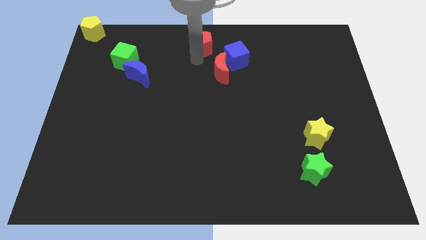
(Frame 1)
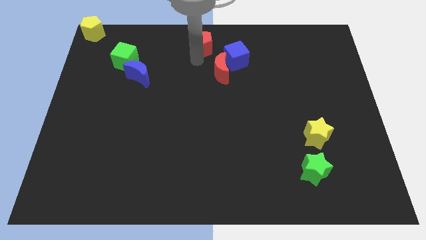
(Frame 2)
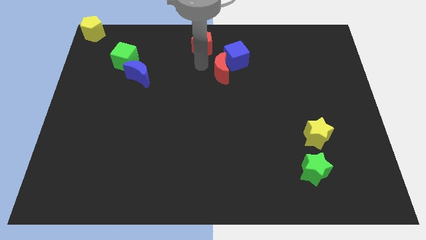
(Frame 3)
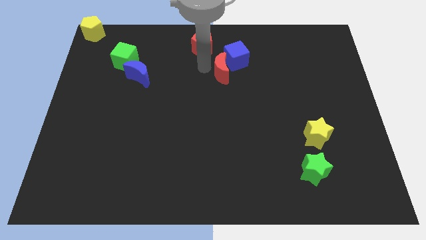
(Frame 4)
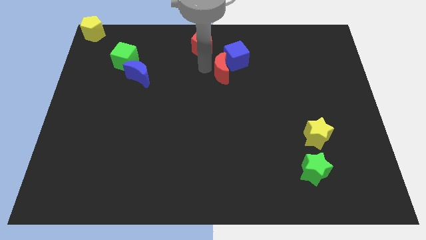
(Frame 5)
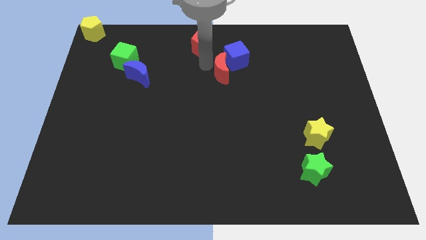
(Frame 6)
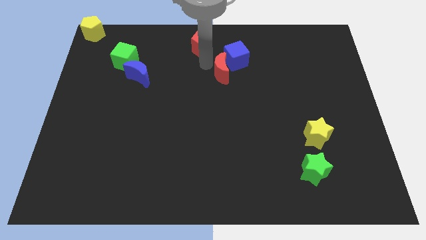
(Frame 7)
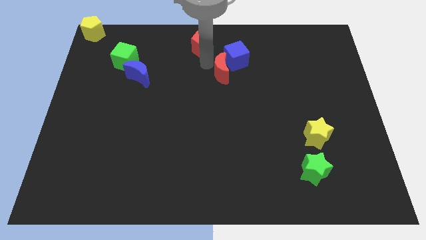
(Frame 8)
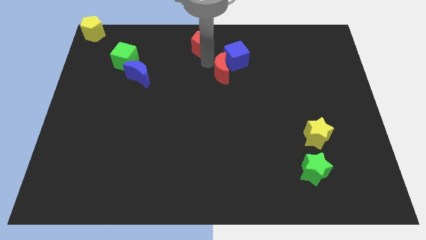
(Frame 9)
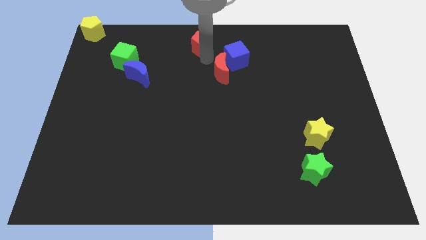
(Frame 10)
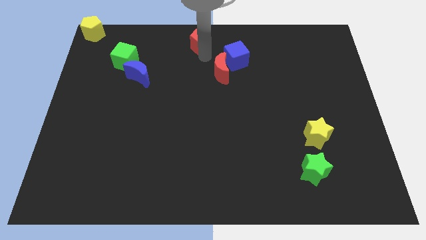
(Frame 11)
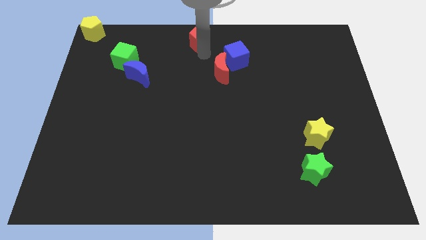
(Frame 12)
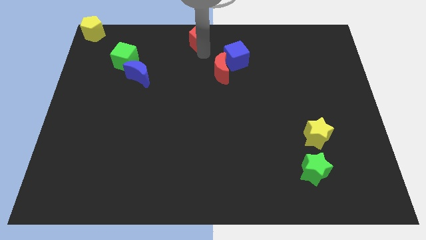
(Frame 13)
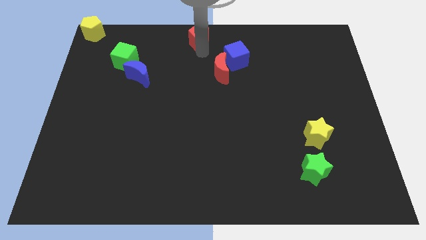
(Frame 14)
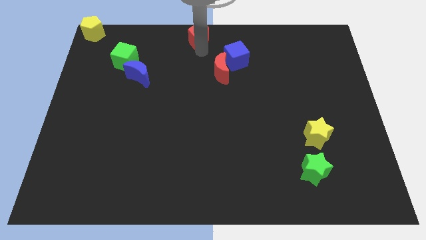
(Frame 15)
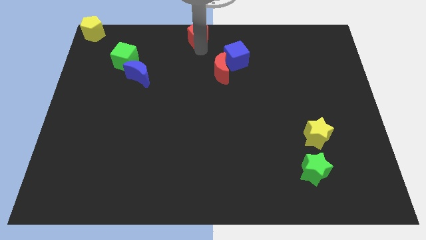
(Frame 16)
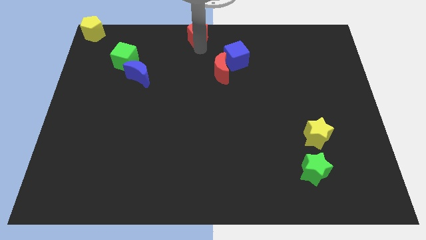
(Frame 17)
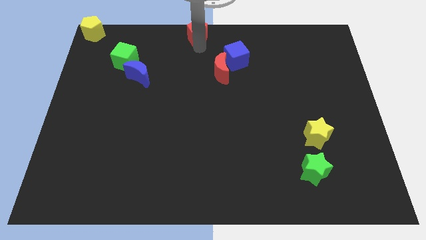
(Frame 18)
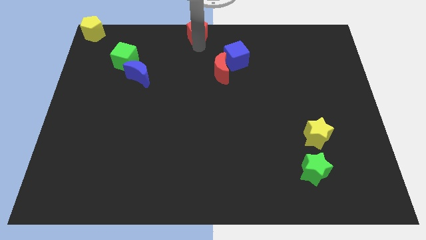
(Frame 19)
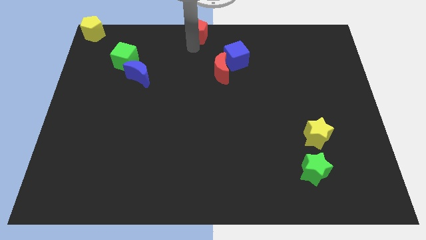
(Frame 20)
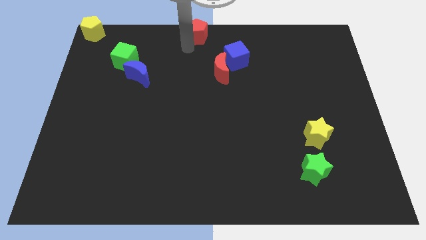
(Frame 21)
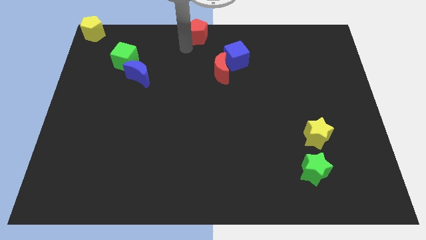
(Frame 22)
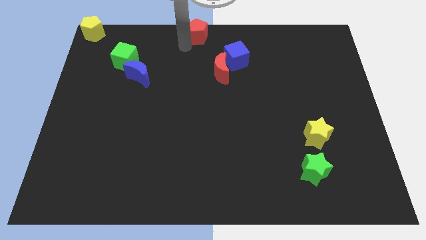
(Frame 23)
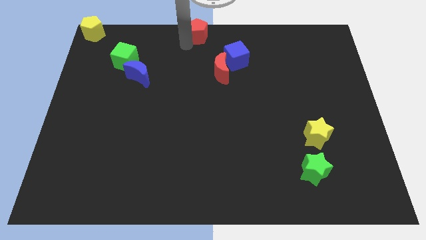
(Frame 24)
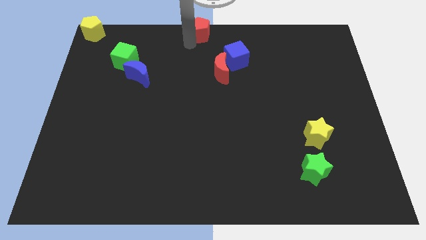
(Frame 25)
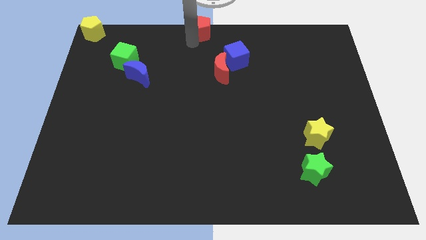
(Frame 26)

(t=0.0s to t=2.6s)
move the red pentagon to the top center of the board

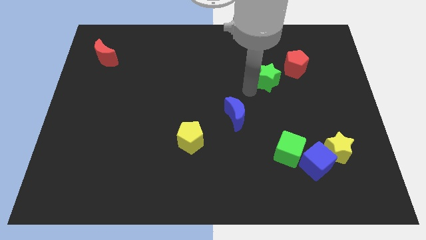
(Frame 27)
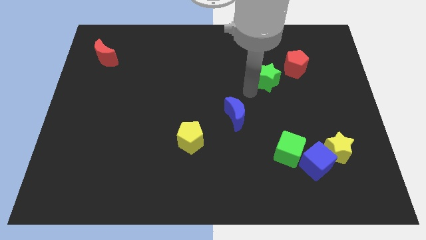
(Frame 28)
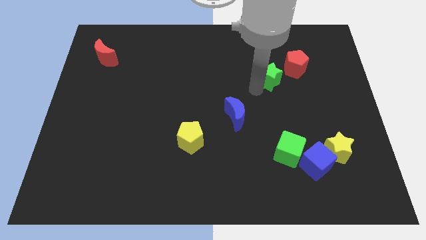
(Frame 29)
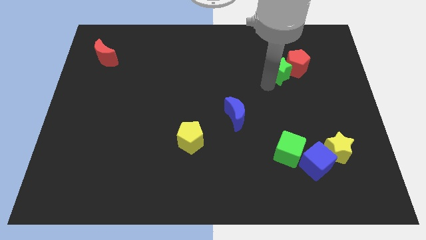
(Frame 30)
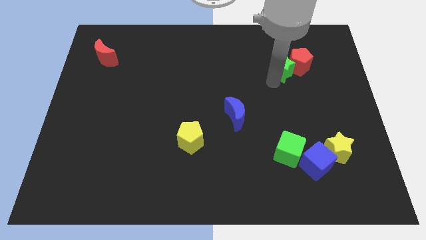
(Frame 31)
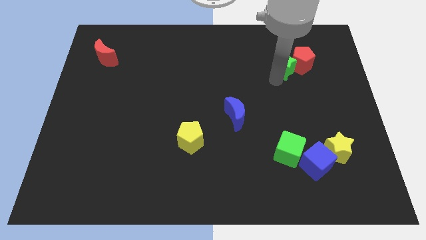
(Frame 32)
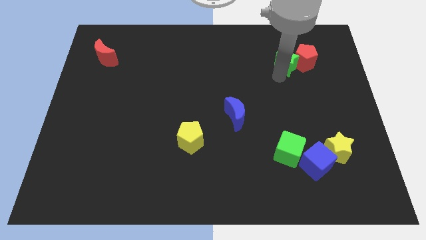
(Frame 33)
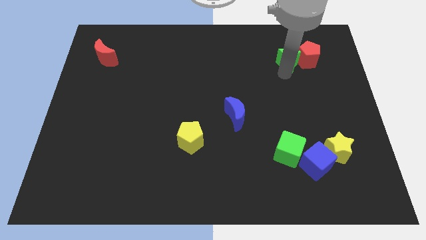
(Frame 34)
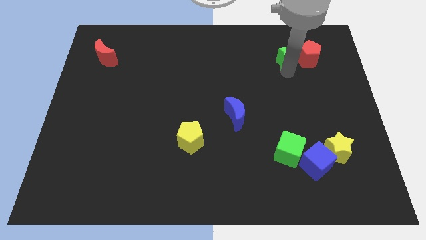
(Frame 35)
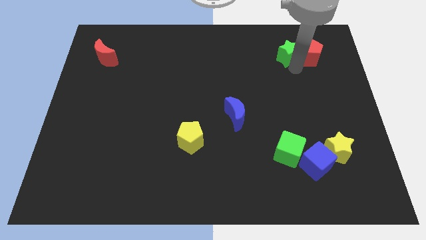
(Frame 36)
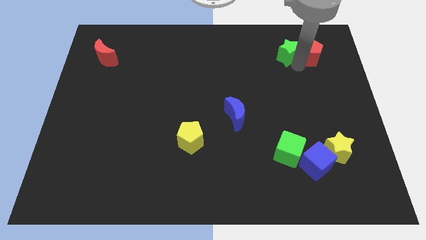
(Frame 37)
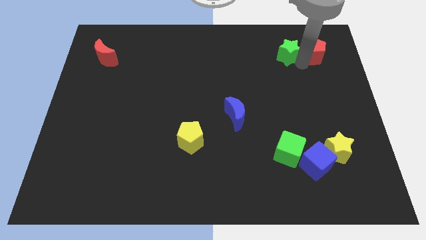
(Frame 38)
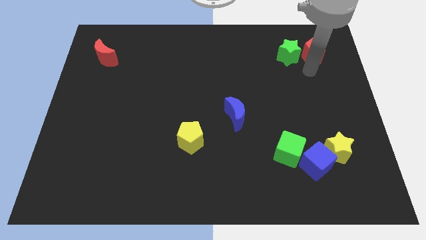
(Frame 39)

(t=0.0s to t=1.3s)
push green star towards red pentagon

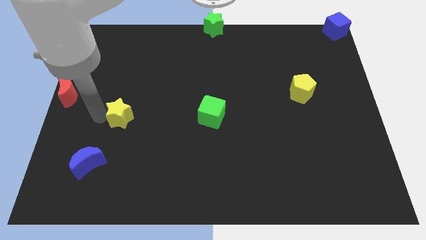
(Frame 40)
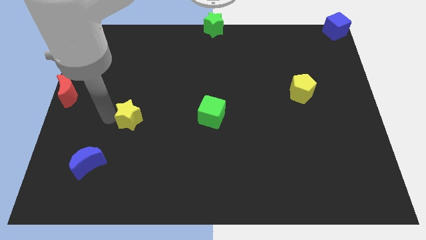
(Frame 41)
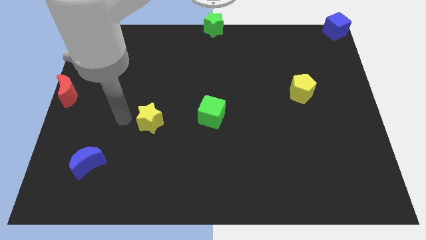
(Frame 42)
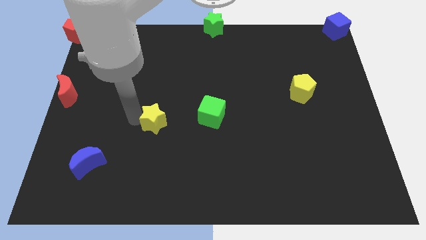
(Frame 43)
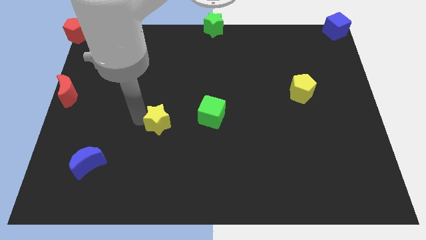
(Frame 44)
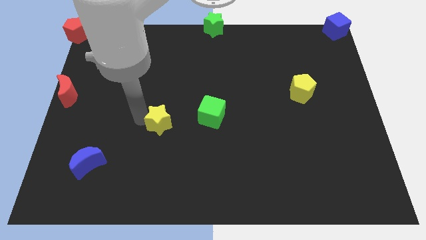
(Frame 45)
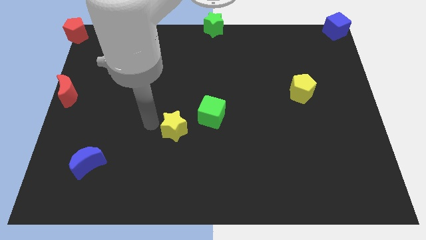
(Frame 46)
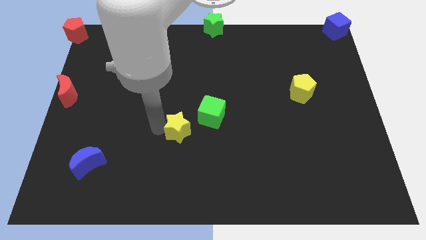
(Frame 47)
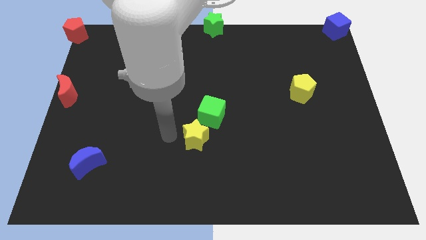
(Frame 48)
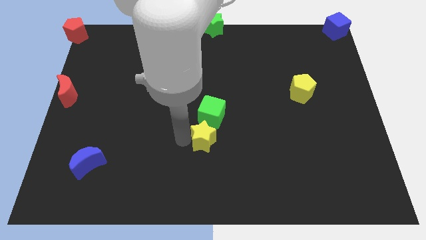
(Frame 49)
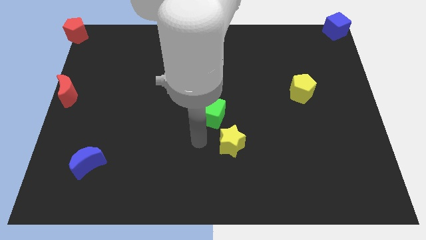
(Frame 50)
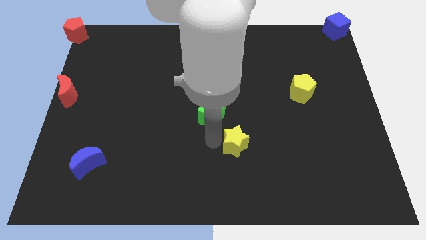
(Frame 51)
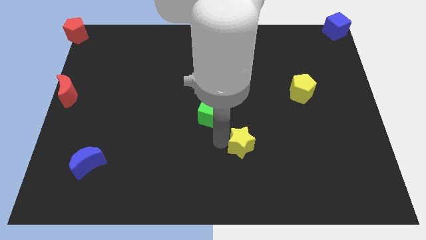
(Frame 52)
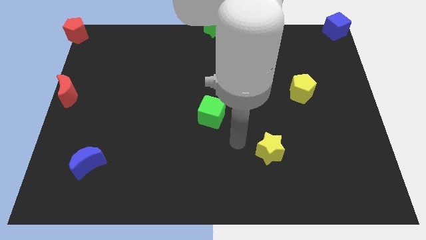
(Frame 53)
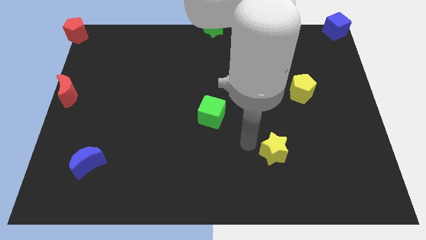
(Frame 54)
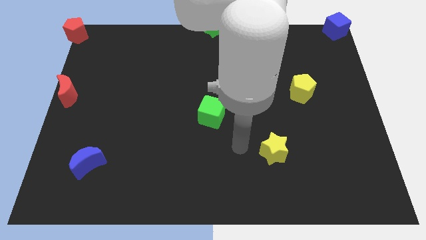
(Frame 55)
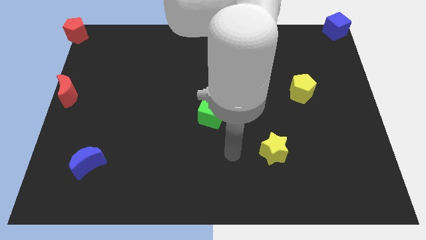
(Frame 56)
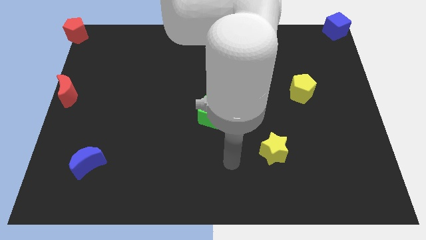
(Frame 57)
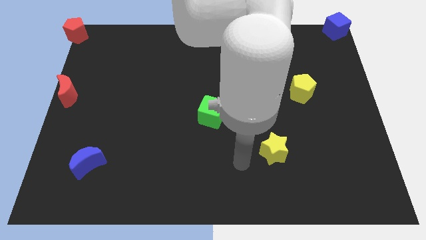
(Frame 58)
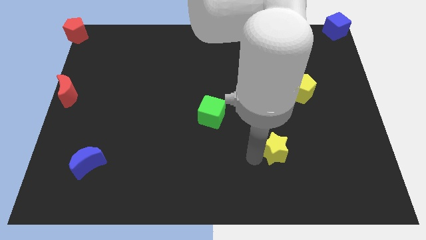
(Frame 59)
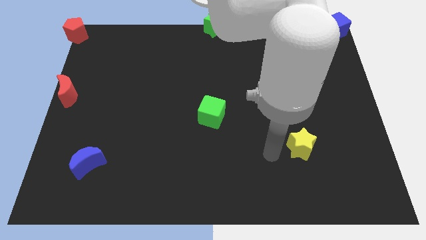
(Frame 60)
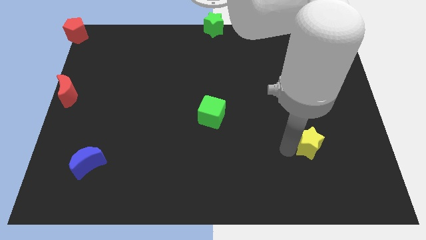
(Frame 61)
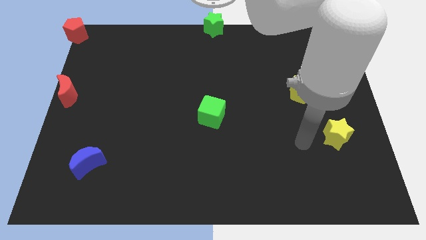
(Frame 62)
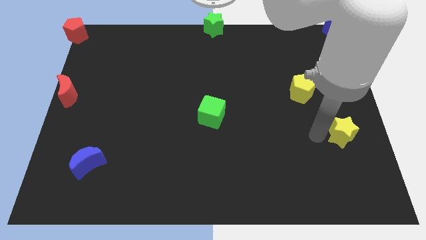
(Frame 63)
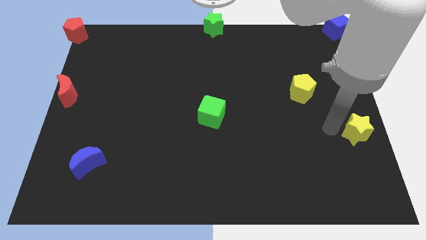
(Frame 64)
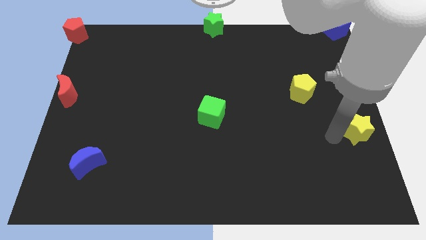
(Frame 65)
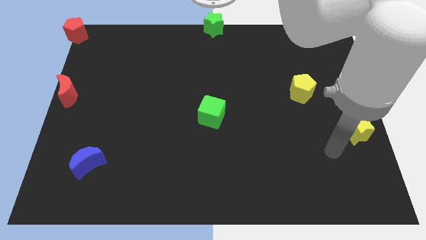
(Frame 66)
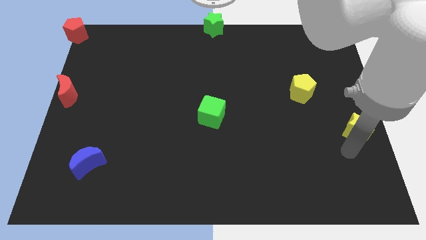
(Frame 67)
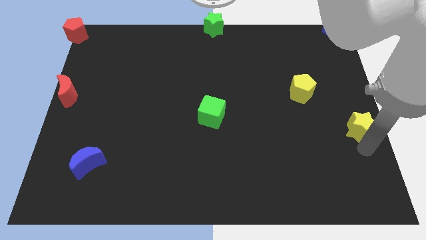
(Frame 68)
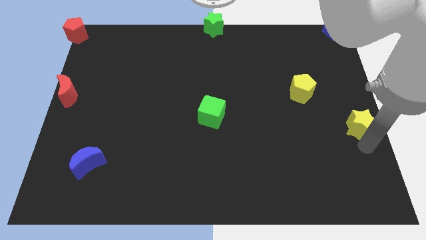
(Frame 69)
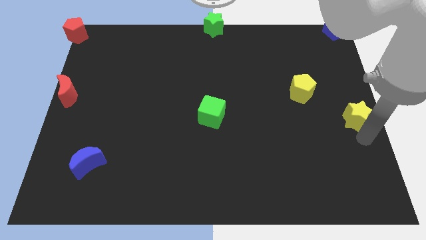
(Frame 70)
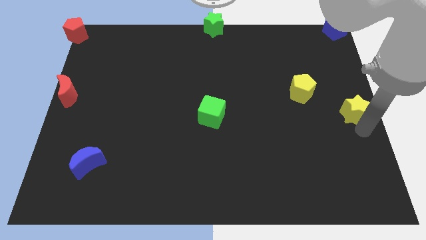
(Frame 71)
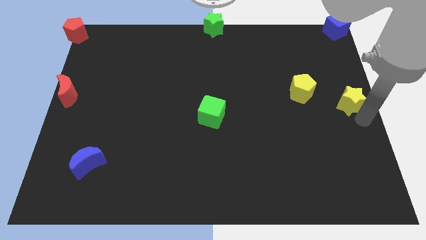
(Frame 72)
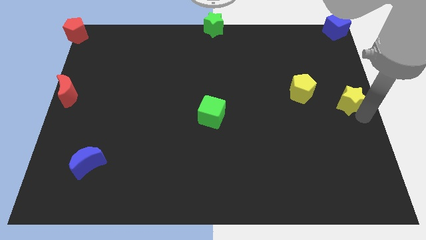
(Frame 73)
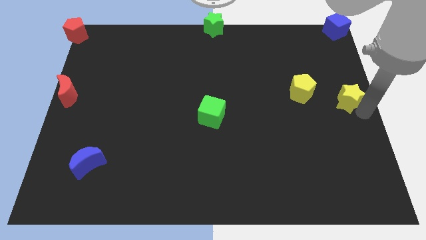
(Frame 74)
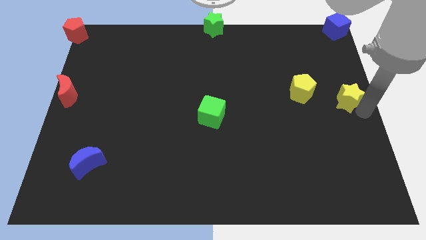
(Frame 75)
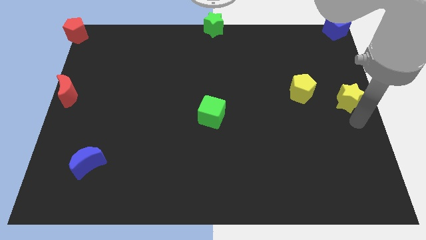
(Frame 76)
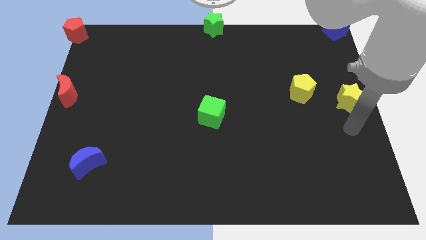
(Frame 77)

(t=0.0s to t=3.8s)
place the yellow star right to the yellow pentagon

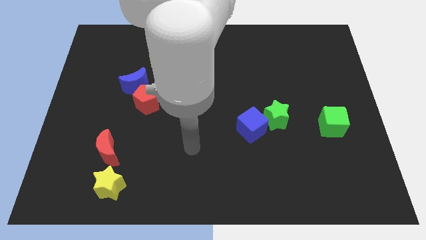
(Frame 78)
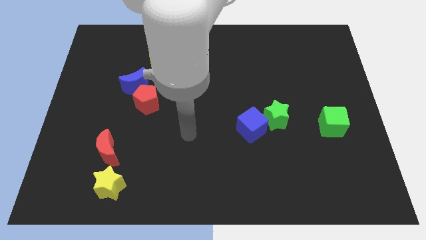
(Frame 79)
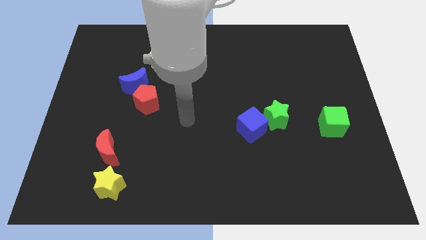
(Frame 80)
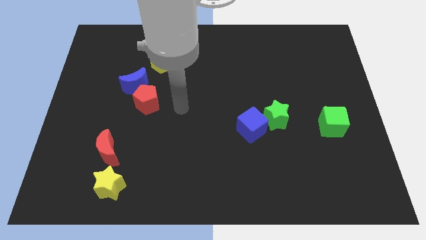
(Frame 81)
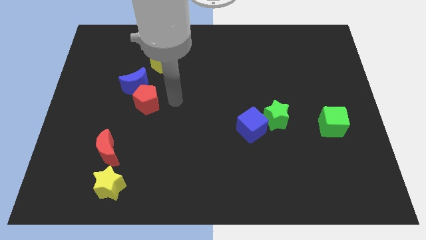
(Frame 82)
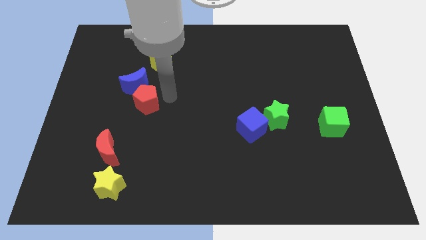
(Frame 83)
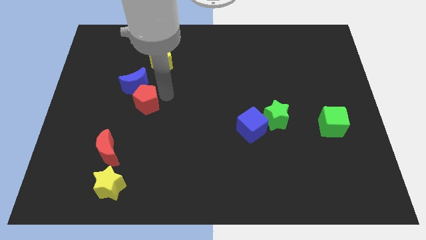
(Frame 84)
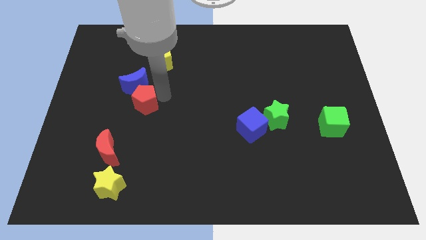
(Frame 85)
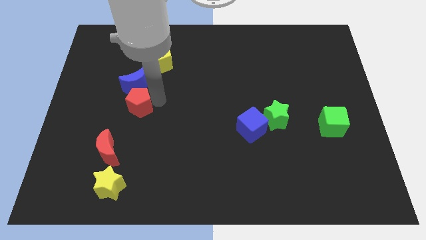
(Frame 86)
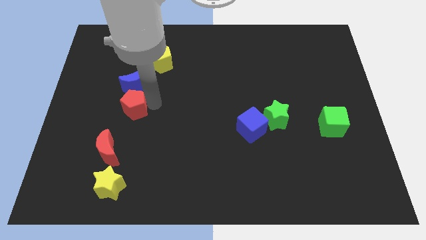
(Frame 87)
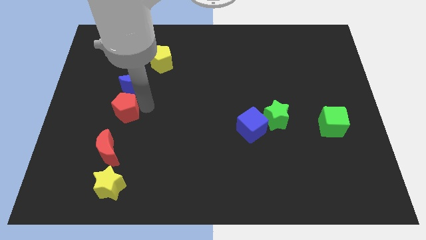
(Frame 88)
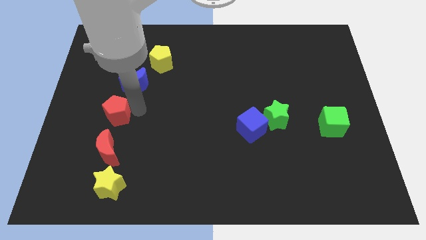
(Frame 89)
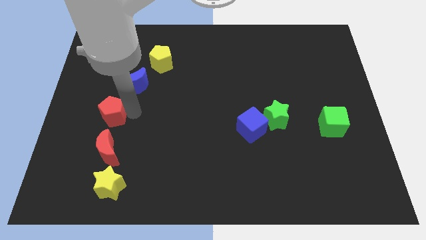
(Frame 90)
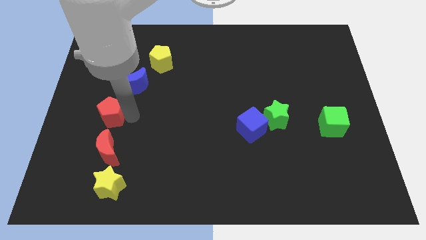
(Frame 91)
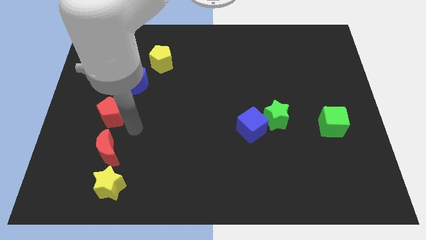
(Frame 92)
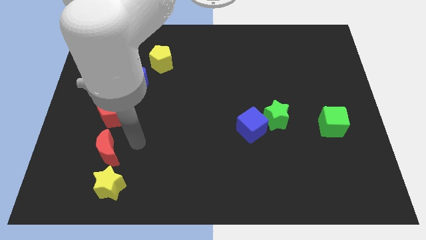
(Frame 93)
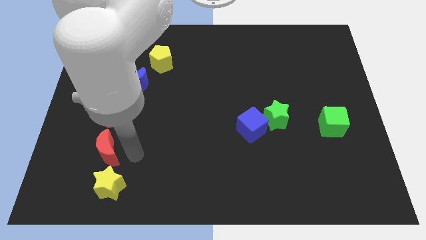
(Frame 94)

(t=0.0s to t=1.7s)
push the red pentagon to the top of red crescent
